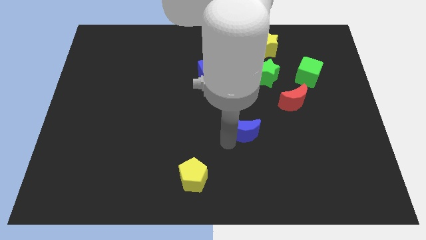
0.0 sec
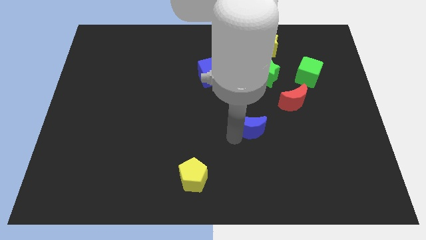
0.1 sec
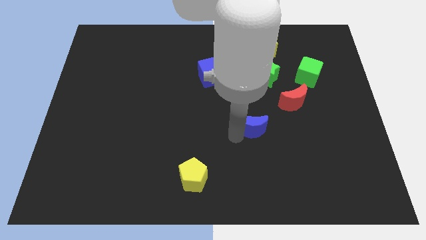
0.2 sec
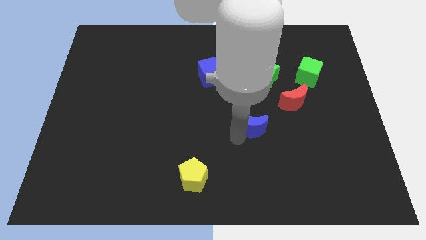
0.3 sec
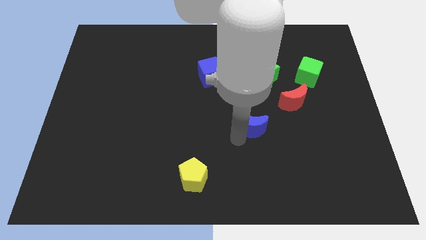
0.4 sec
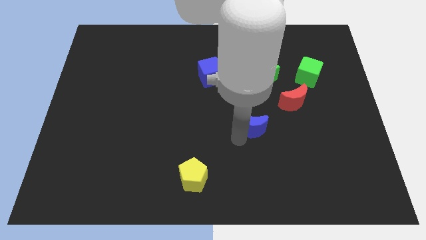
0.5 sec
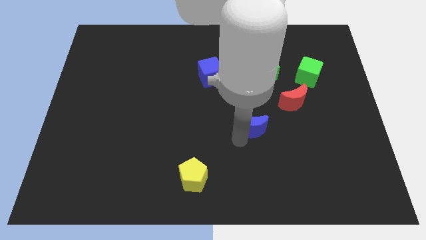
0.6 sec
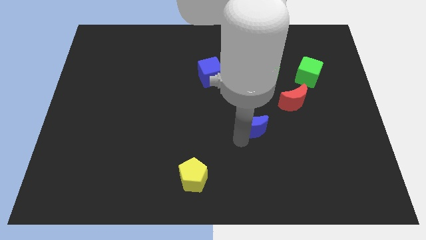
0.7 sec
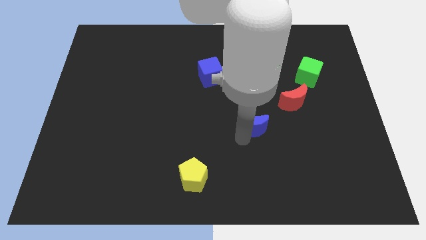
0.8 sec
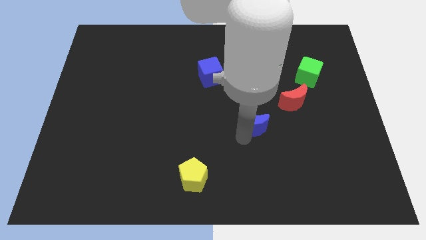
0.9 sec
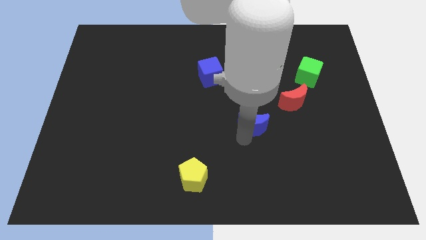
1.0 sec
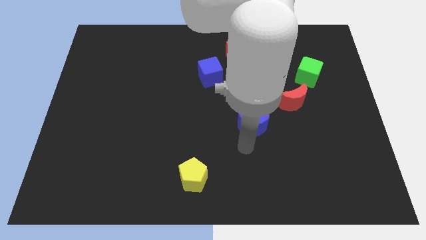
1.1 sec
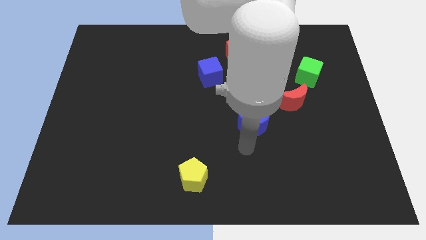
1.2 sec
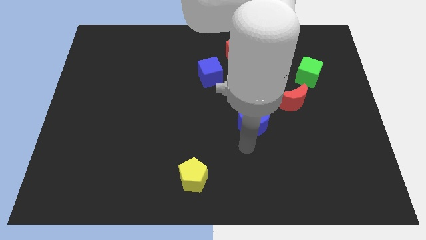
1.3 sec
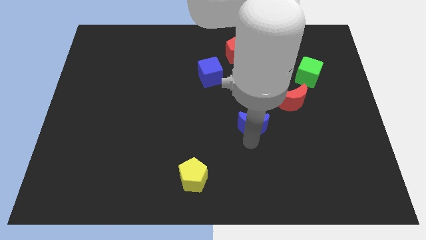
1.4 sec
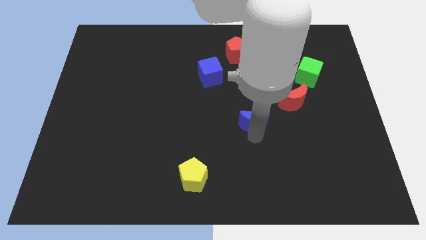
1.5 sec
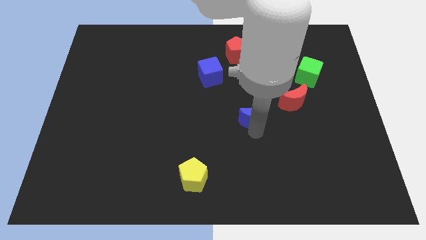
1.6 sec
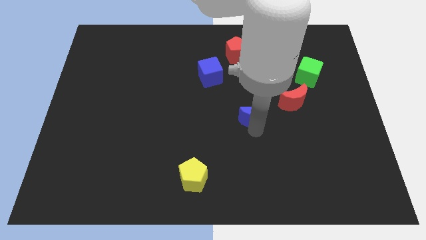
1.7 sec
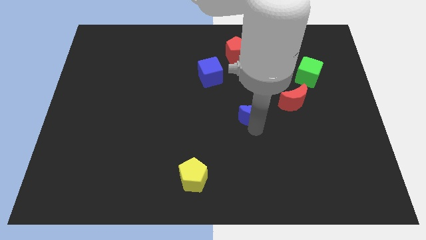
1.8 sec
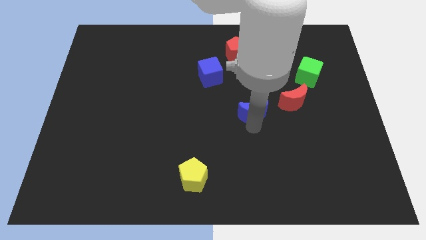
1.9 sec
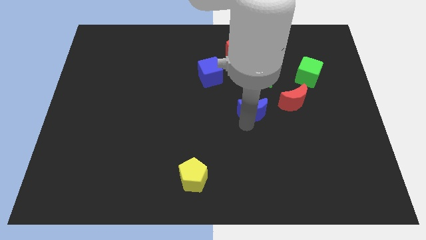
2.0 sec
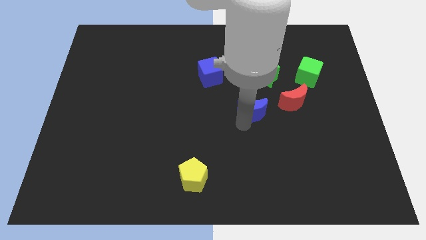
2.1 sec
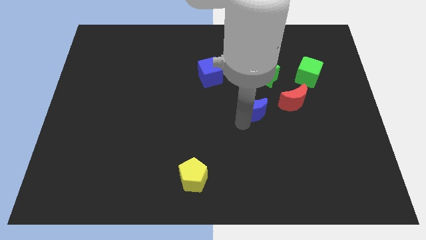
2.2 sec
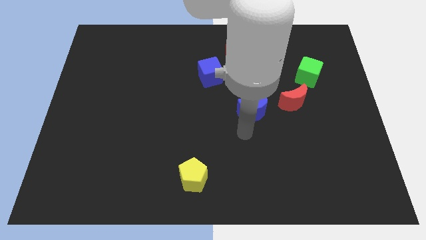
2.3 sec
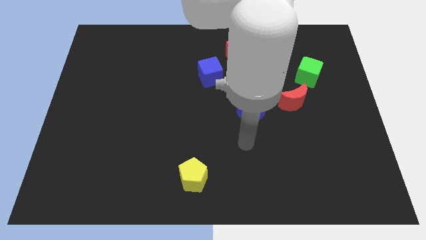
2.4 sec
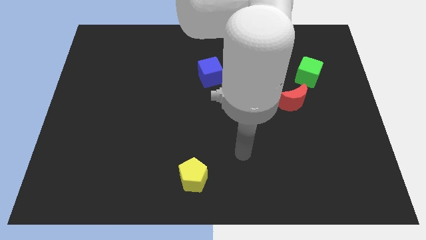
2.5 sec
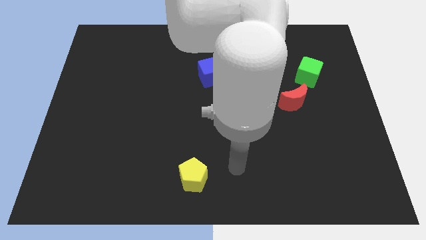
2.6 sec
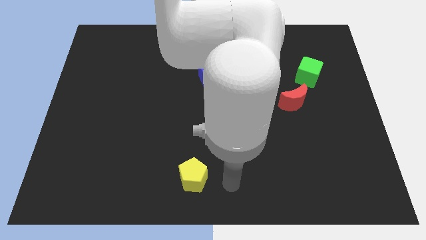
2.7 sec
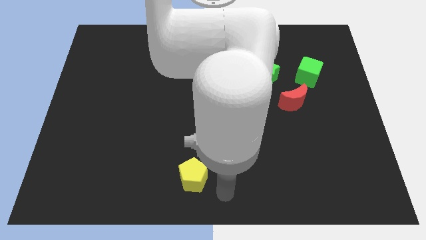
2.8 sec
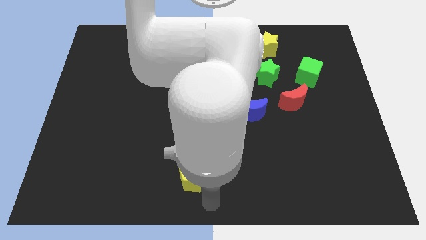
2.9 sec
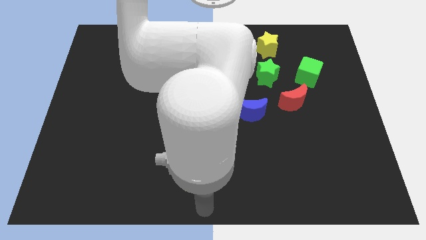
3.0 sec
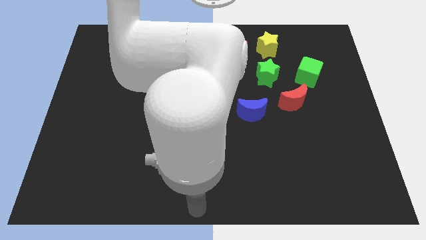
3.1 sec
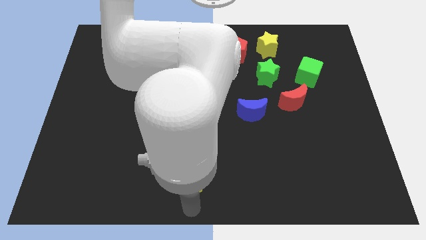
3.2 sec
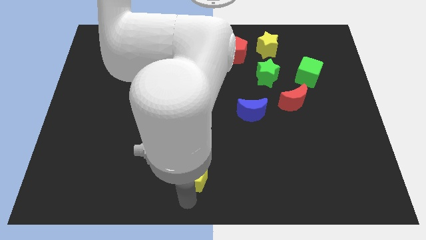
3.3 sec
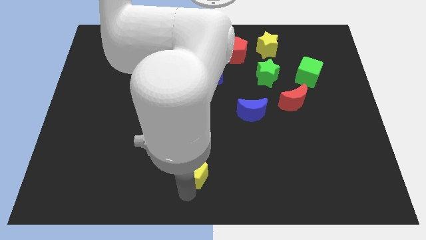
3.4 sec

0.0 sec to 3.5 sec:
place the arm below yellow pentagon

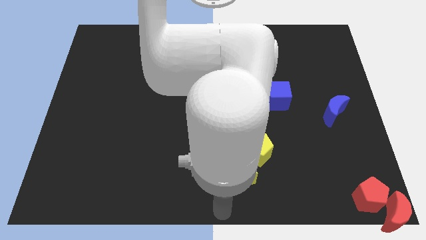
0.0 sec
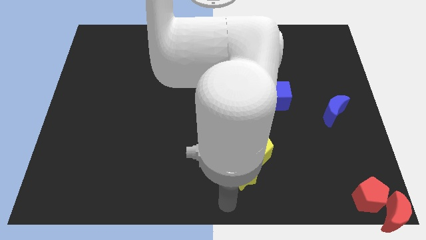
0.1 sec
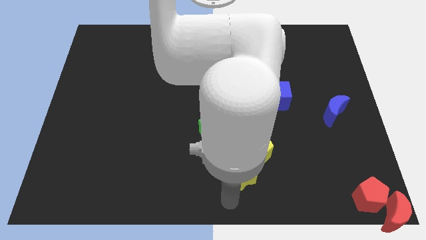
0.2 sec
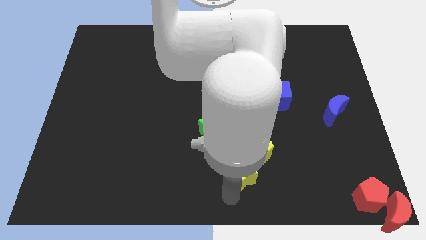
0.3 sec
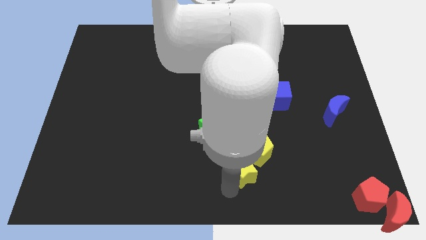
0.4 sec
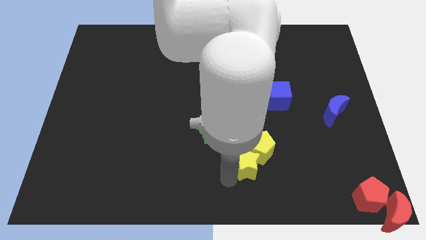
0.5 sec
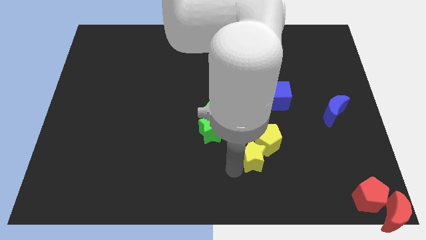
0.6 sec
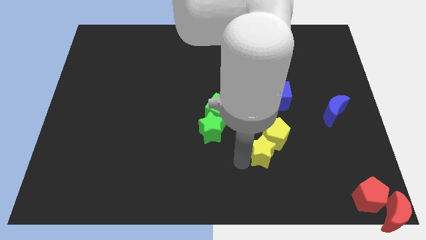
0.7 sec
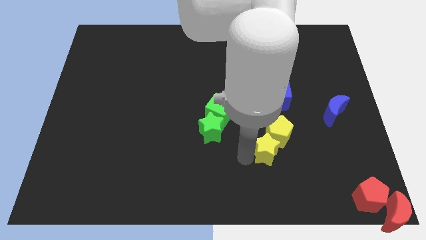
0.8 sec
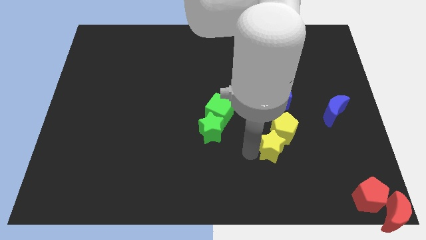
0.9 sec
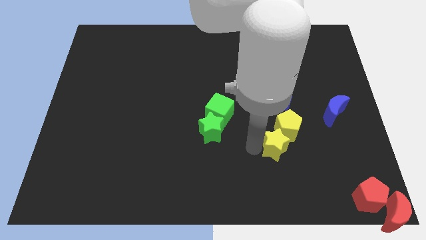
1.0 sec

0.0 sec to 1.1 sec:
push the yellow blocks to the top of the board

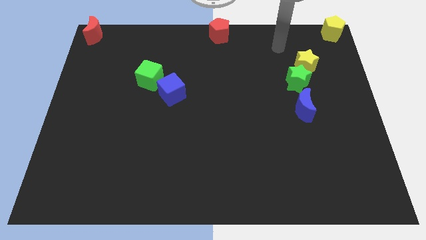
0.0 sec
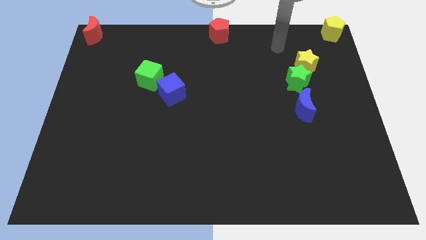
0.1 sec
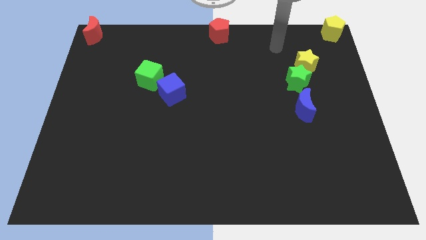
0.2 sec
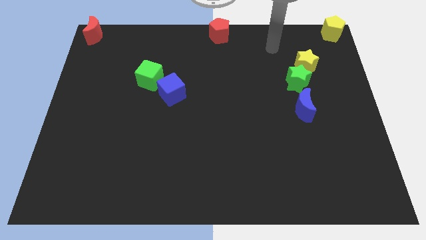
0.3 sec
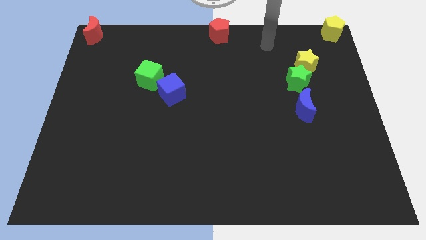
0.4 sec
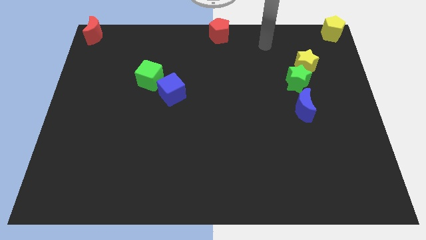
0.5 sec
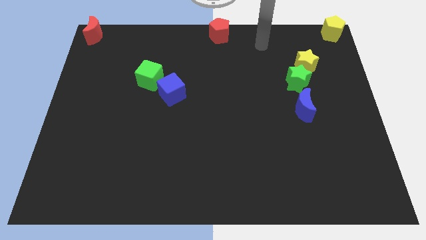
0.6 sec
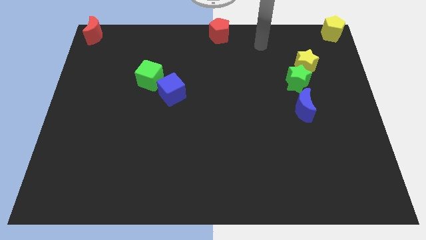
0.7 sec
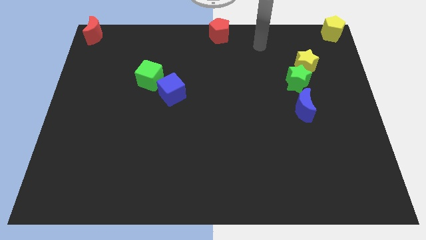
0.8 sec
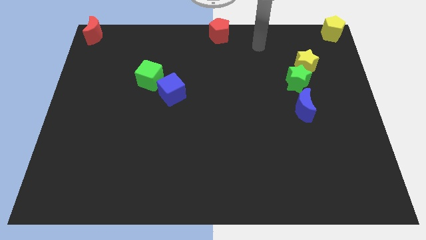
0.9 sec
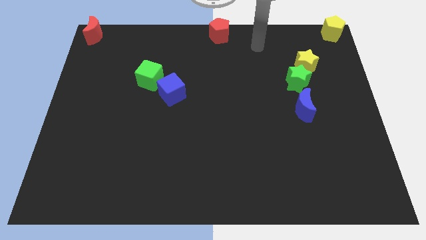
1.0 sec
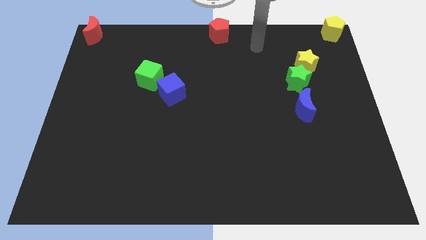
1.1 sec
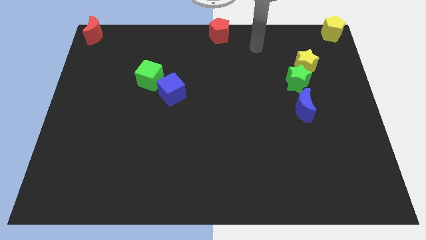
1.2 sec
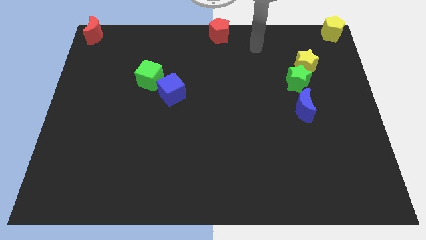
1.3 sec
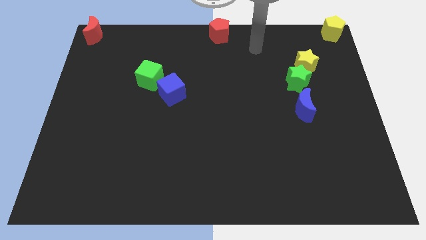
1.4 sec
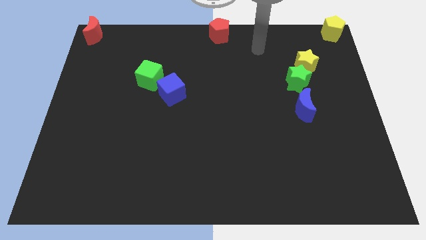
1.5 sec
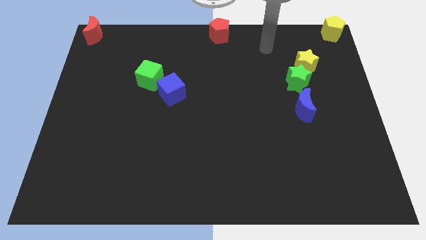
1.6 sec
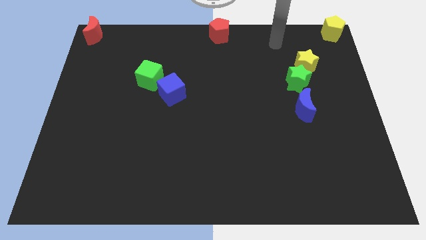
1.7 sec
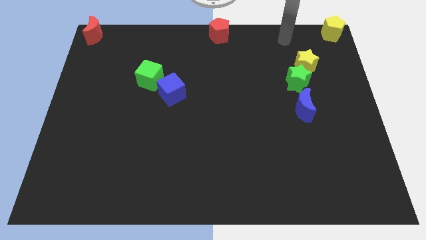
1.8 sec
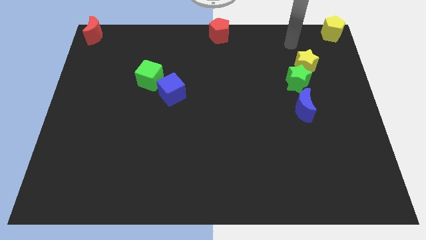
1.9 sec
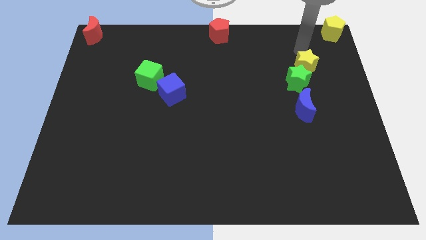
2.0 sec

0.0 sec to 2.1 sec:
move your arm to the top of the yellow star

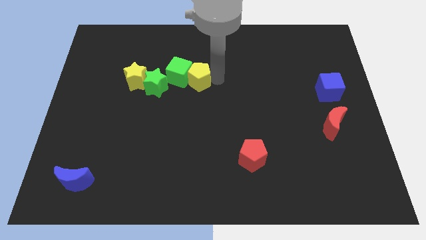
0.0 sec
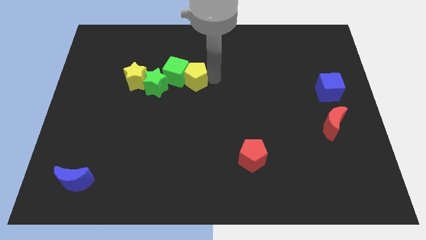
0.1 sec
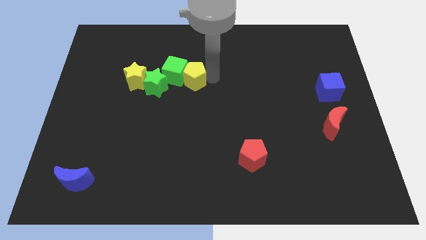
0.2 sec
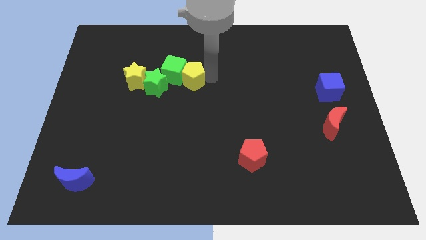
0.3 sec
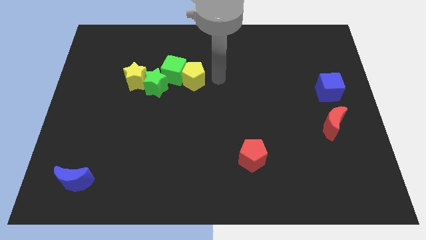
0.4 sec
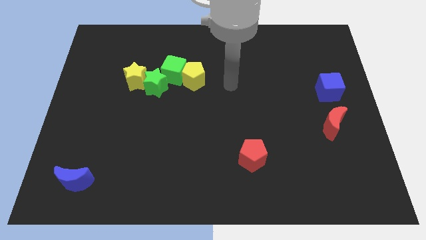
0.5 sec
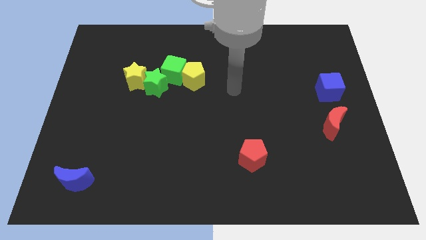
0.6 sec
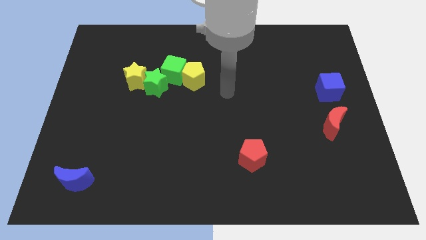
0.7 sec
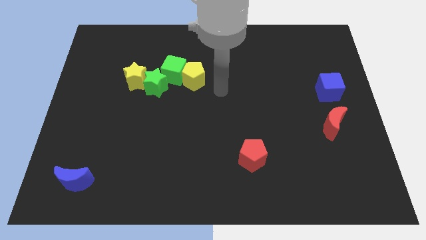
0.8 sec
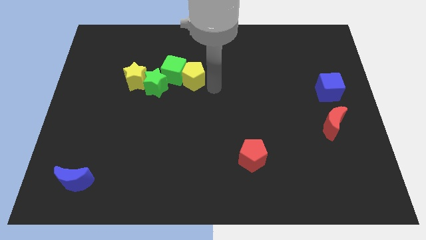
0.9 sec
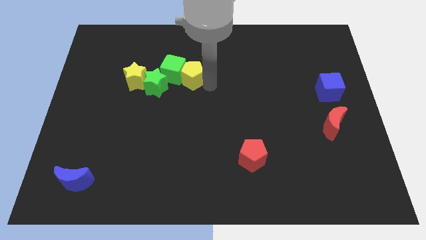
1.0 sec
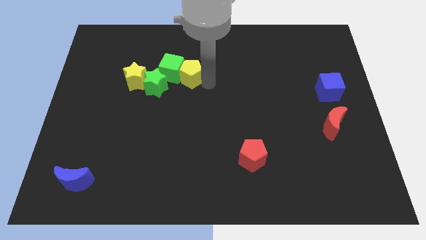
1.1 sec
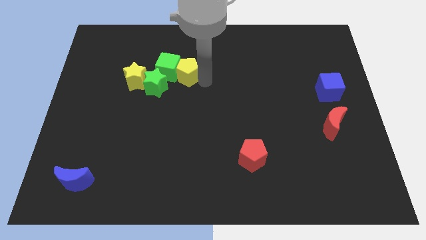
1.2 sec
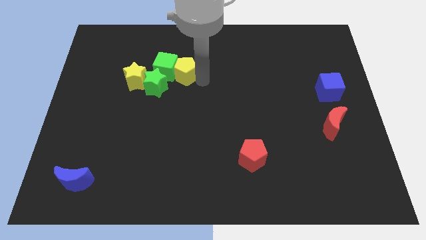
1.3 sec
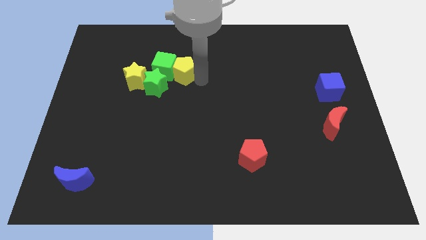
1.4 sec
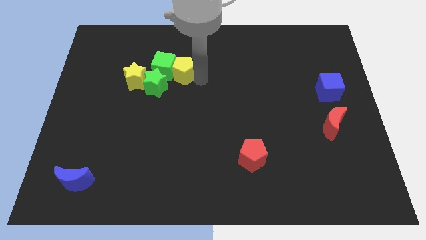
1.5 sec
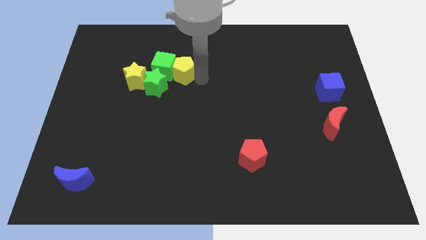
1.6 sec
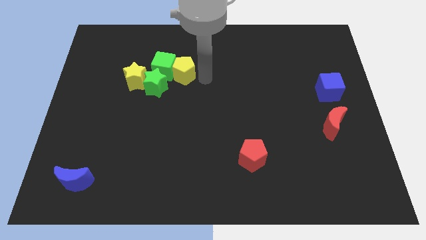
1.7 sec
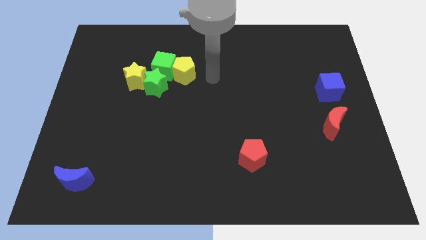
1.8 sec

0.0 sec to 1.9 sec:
slide the green cube to the top of the green star

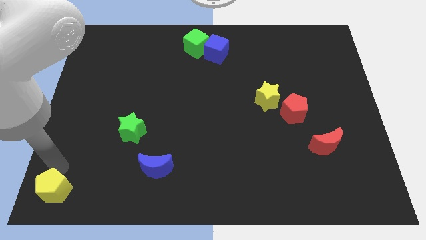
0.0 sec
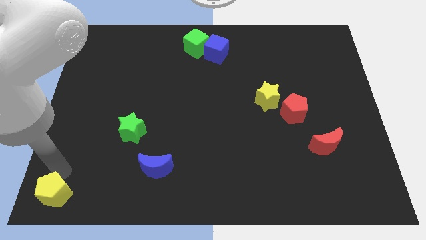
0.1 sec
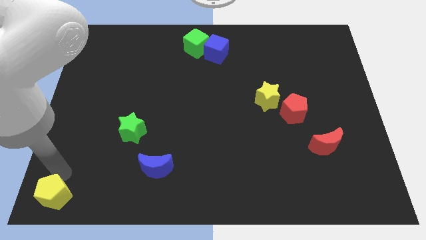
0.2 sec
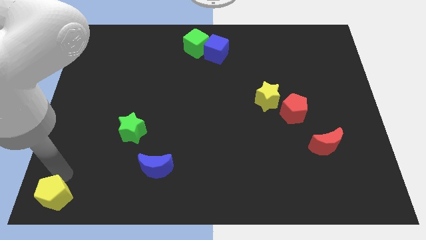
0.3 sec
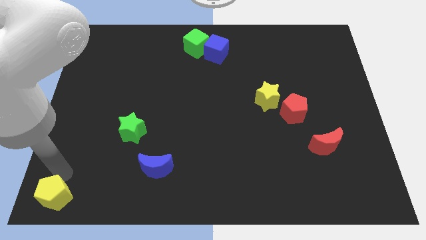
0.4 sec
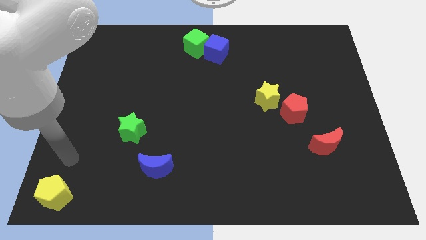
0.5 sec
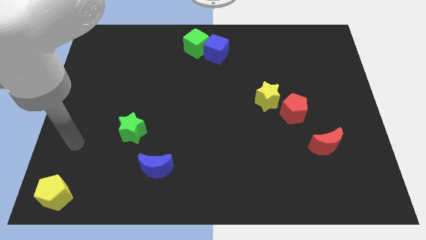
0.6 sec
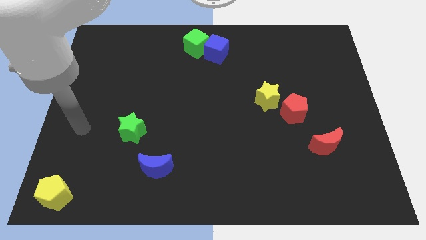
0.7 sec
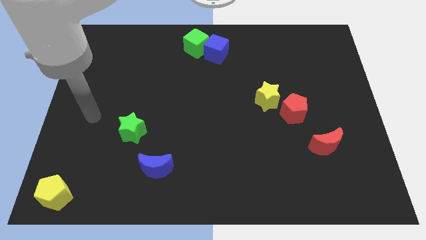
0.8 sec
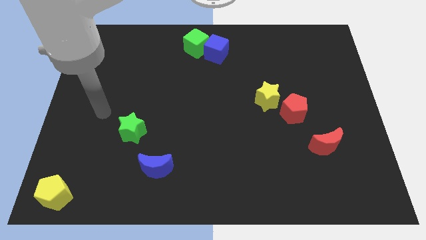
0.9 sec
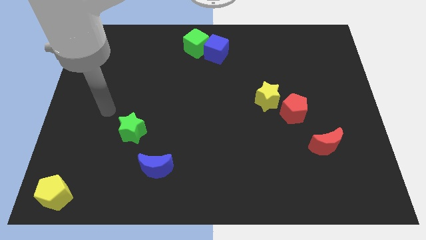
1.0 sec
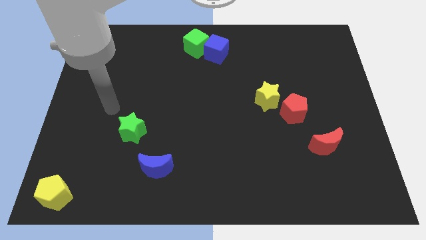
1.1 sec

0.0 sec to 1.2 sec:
move arm away from yellow pentagon
